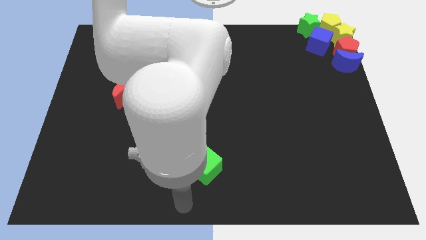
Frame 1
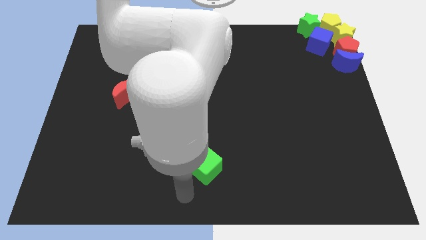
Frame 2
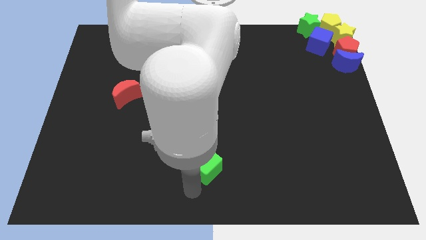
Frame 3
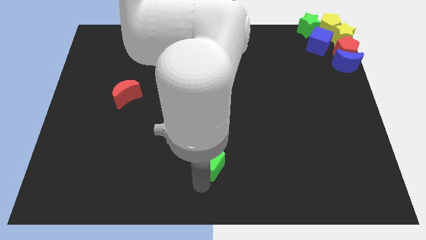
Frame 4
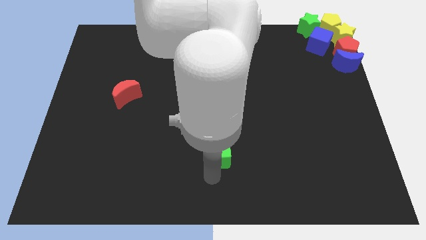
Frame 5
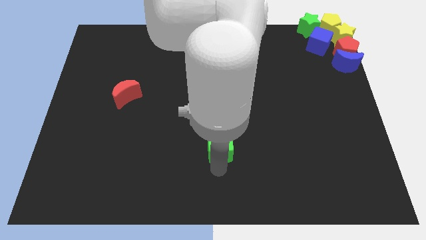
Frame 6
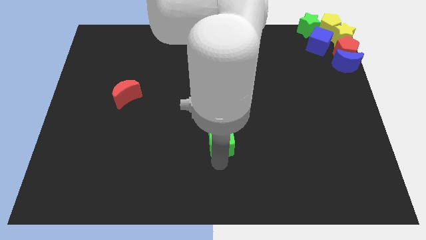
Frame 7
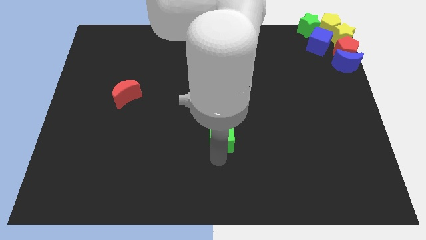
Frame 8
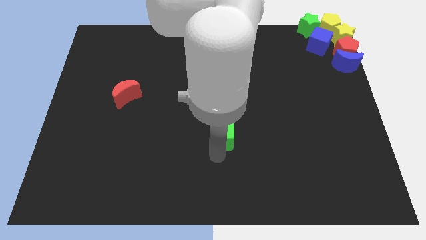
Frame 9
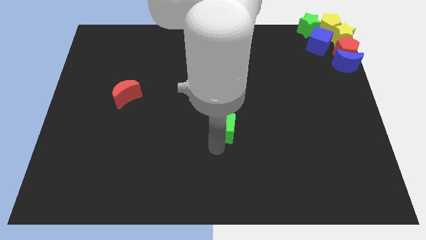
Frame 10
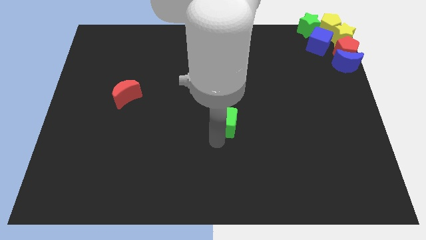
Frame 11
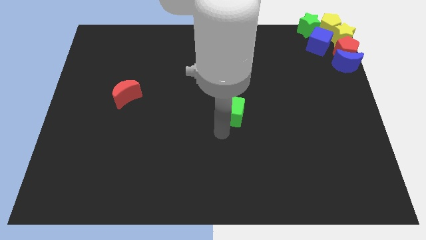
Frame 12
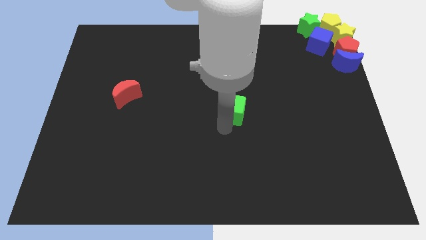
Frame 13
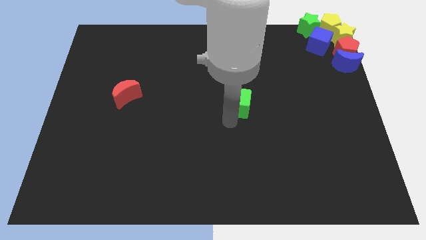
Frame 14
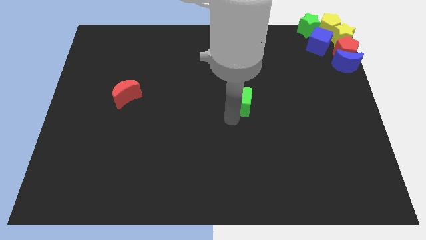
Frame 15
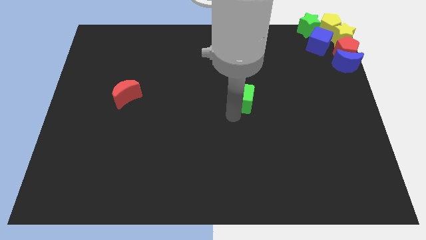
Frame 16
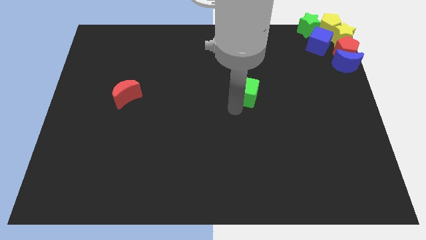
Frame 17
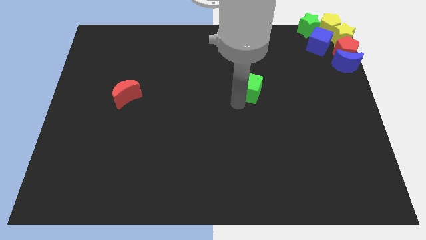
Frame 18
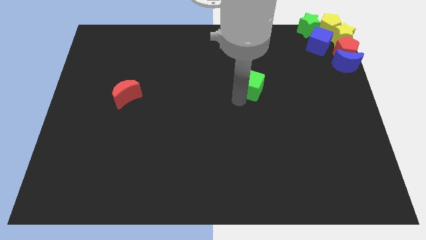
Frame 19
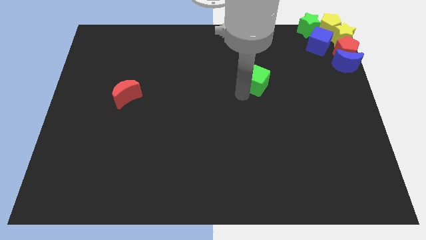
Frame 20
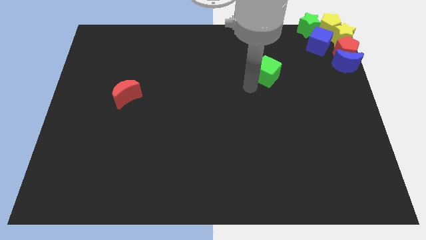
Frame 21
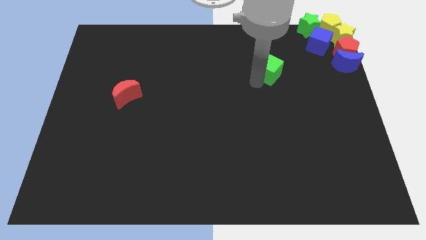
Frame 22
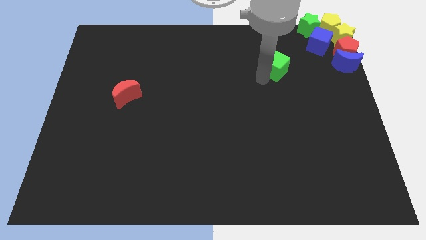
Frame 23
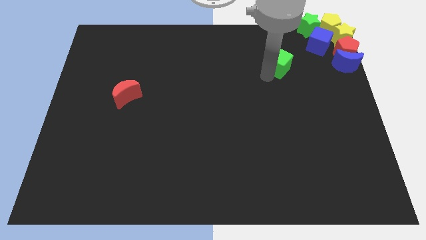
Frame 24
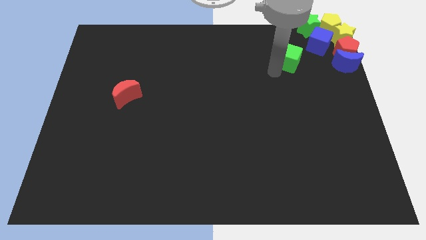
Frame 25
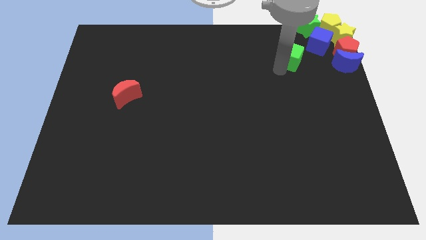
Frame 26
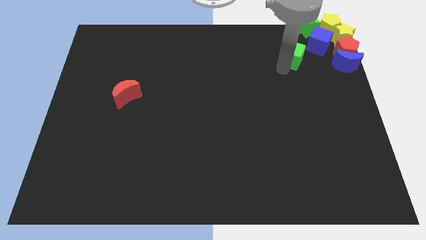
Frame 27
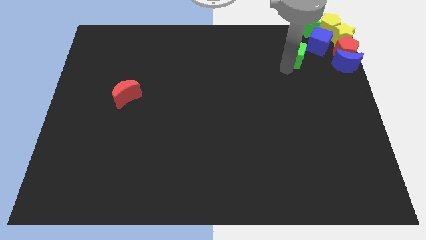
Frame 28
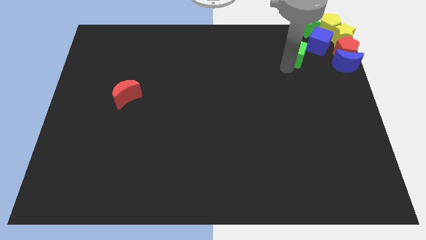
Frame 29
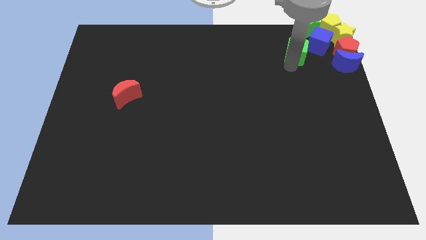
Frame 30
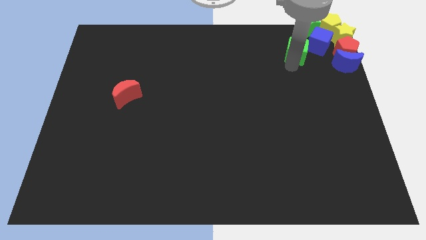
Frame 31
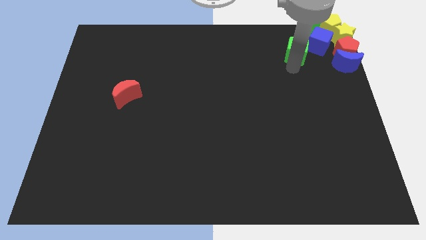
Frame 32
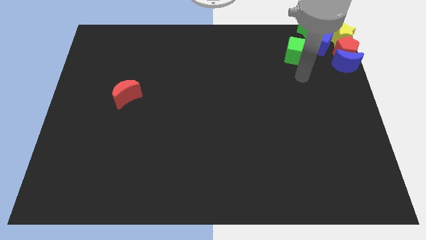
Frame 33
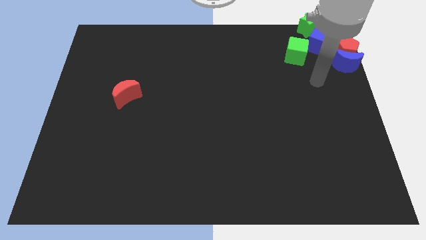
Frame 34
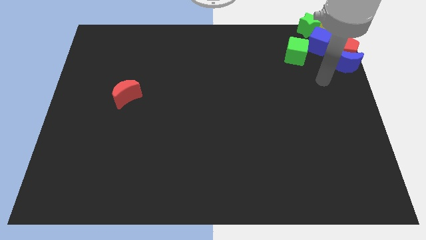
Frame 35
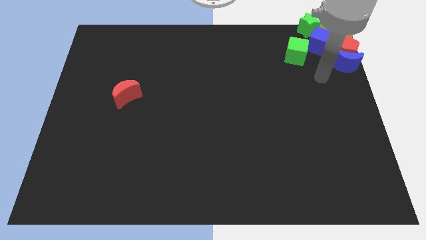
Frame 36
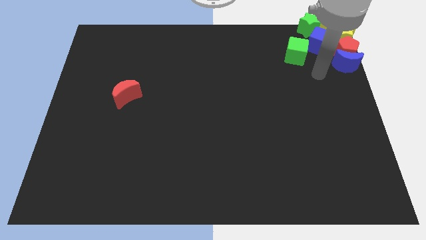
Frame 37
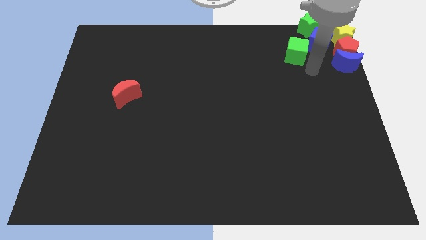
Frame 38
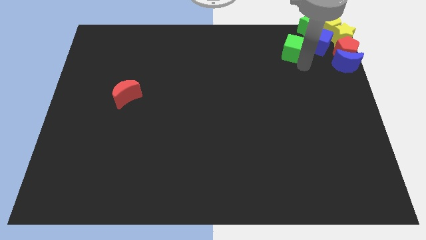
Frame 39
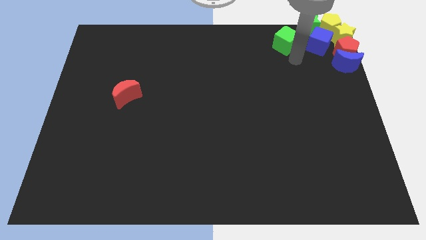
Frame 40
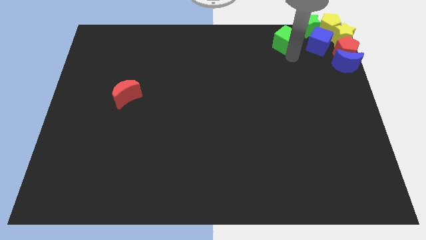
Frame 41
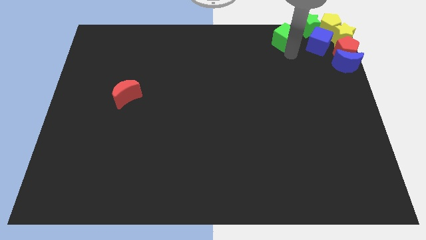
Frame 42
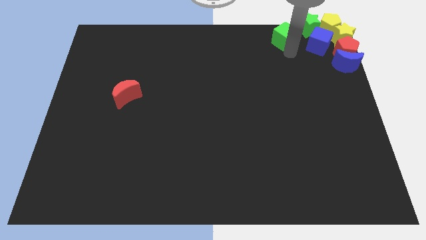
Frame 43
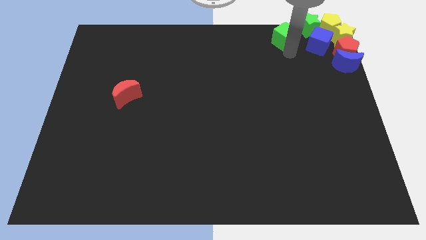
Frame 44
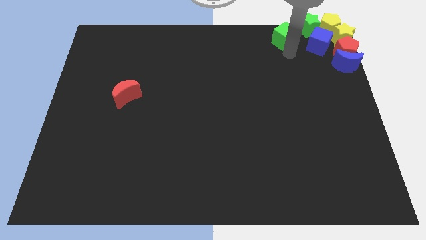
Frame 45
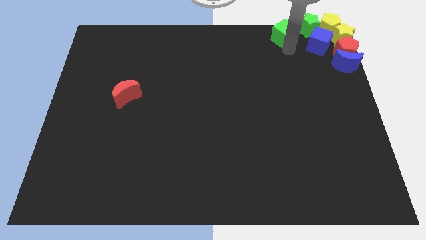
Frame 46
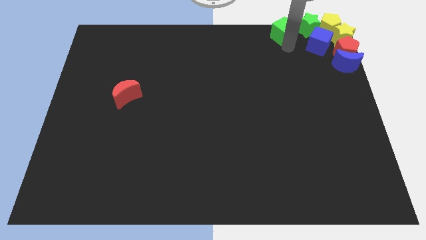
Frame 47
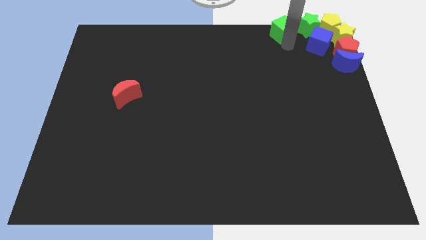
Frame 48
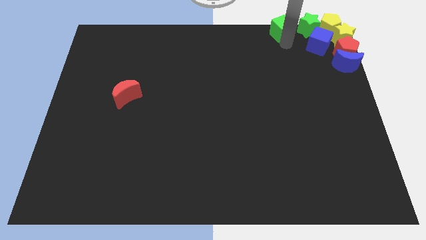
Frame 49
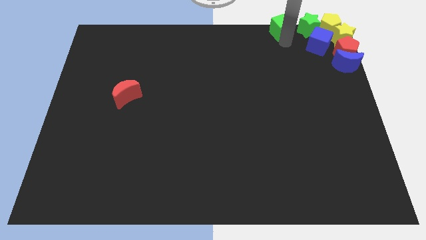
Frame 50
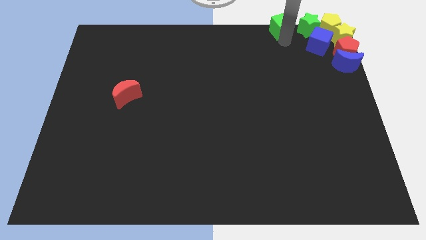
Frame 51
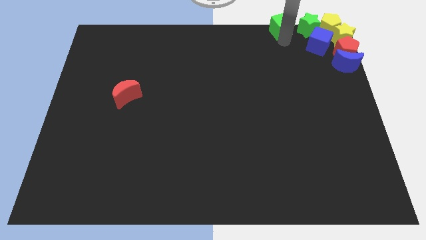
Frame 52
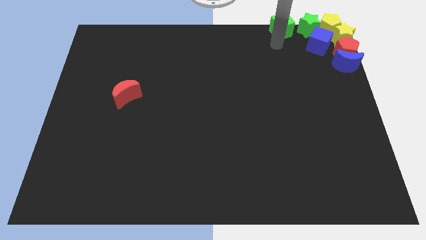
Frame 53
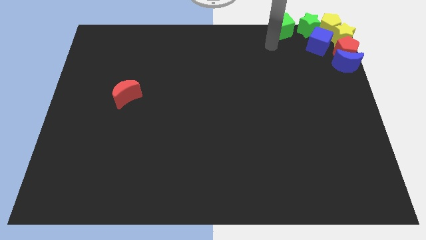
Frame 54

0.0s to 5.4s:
place the green cube left to the green star

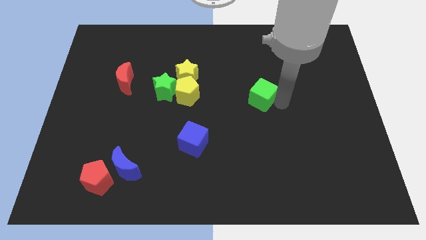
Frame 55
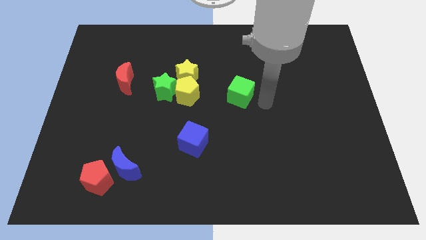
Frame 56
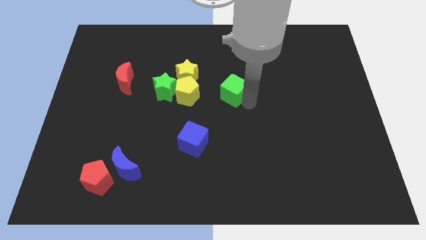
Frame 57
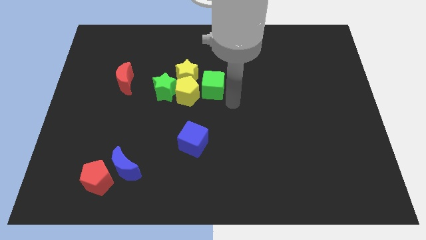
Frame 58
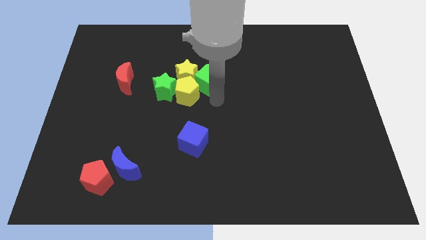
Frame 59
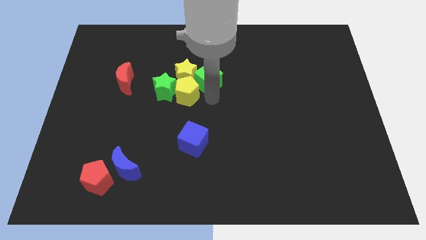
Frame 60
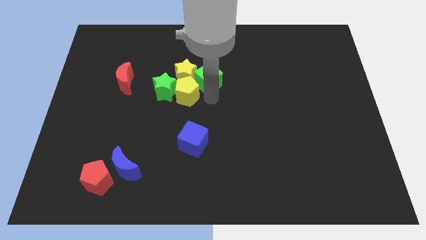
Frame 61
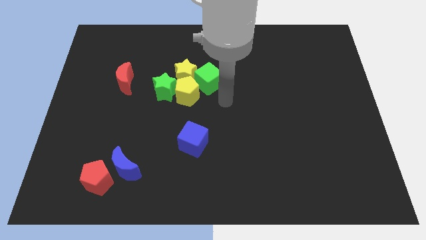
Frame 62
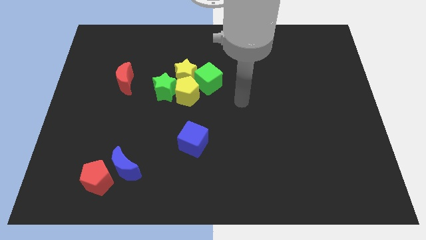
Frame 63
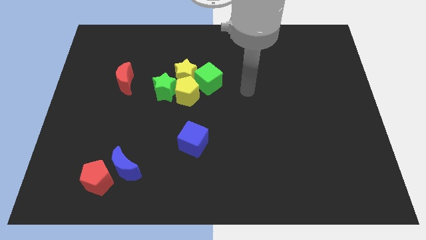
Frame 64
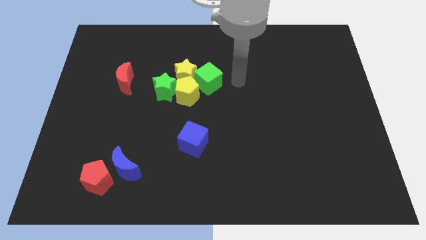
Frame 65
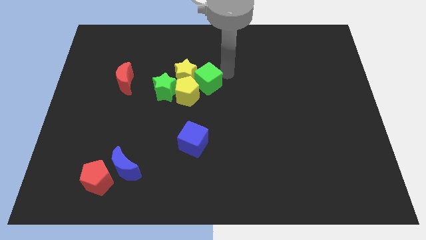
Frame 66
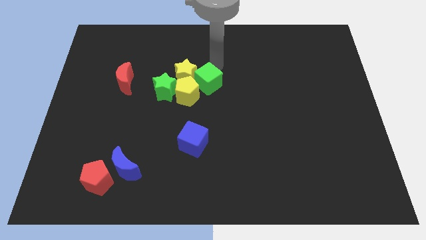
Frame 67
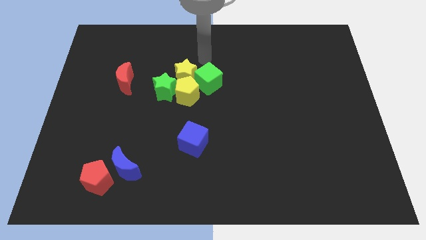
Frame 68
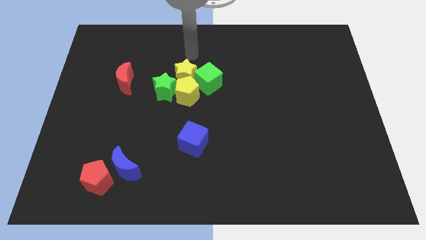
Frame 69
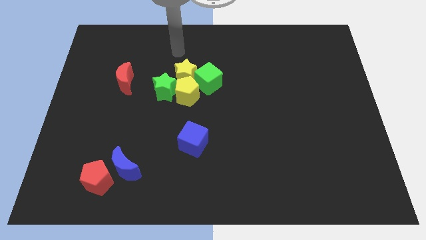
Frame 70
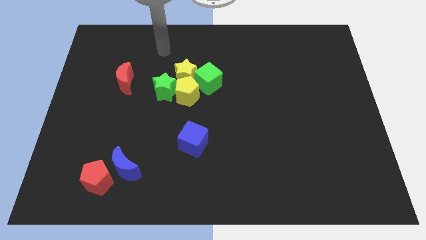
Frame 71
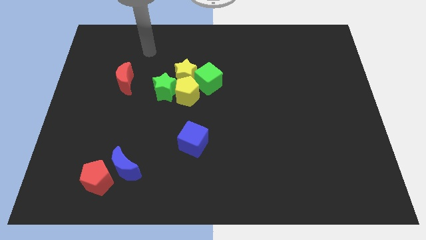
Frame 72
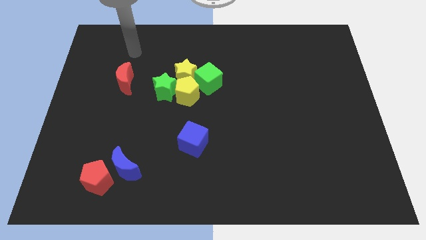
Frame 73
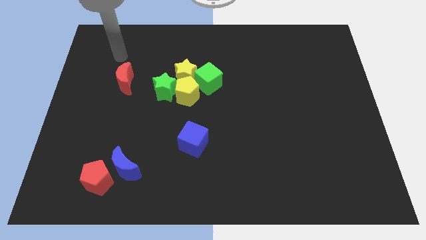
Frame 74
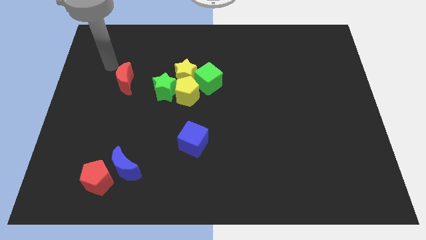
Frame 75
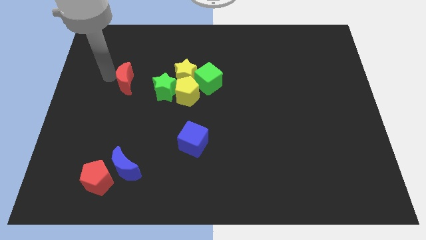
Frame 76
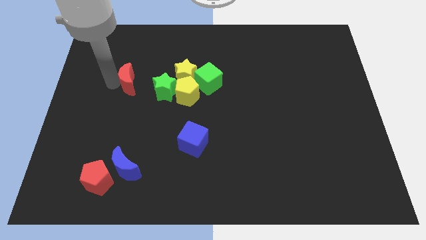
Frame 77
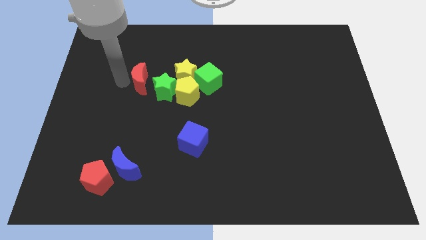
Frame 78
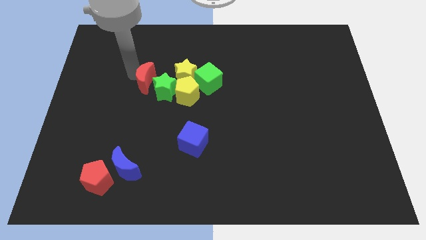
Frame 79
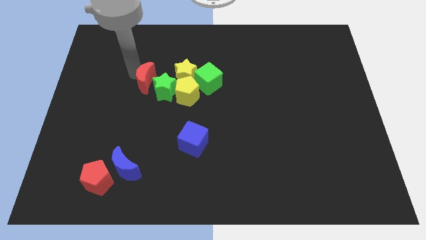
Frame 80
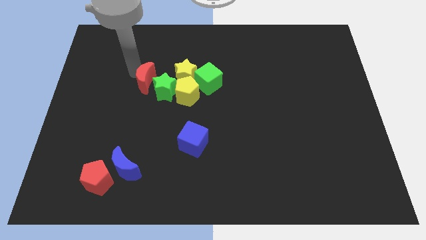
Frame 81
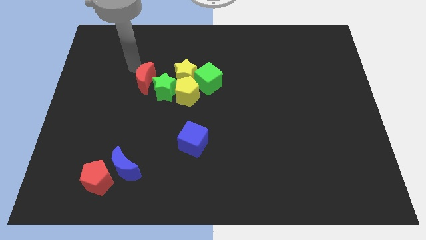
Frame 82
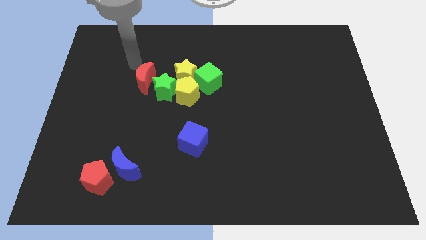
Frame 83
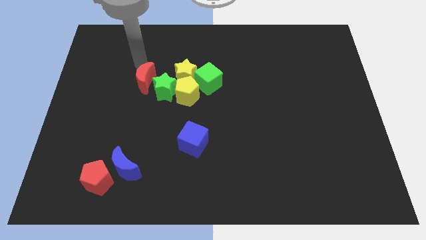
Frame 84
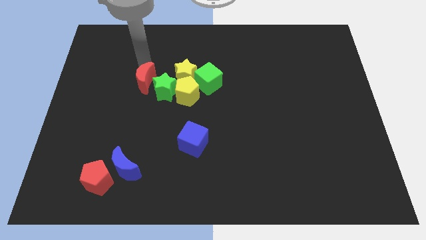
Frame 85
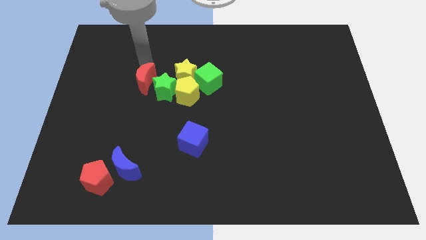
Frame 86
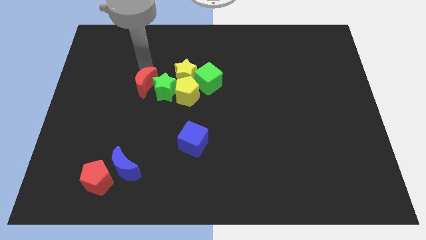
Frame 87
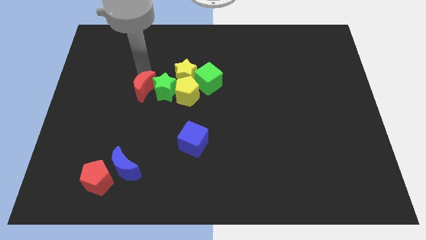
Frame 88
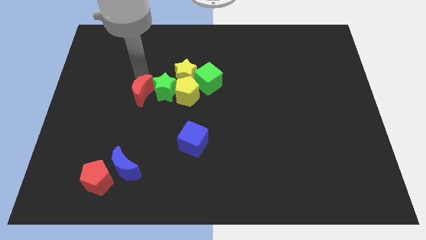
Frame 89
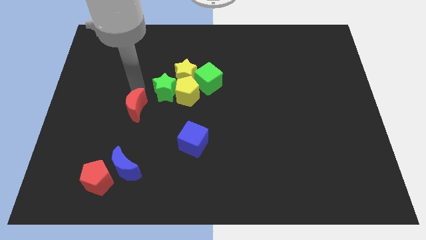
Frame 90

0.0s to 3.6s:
slide the red moon into the green star

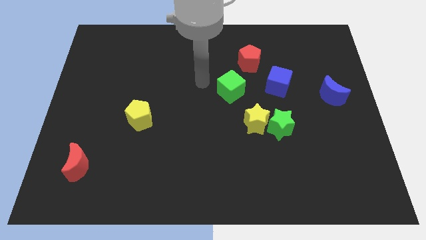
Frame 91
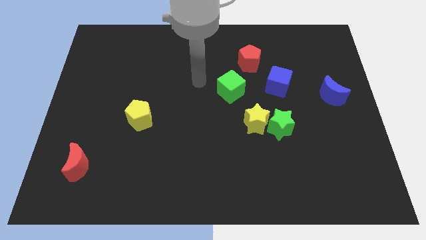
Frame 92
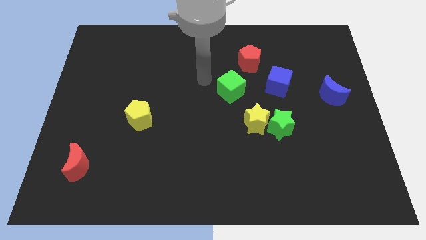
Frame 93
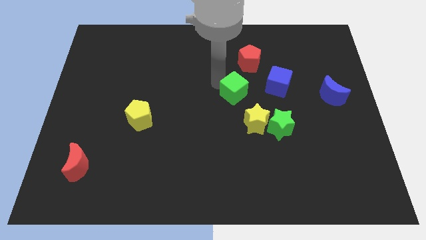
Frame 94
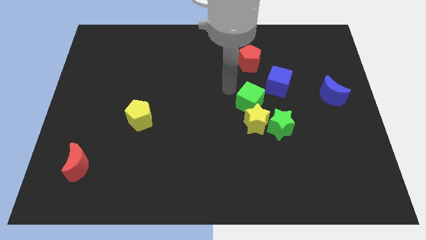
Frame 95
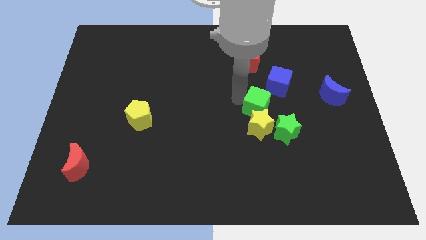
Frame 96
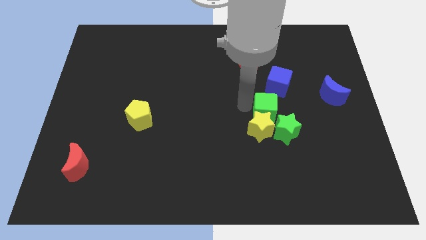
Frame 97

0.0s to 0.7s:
push the green cube to the group of objects
